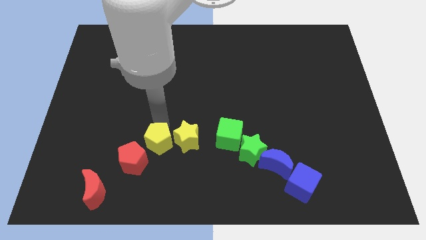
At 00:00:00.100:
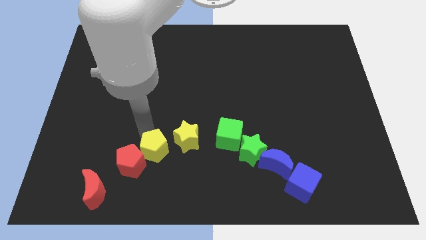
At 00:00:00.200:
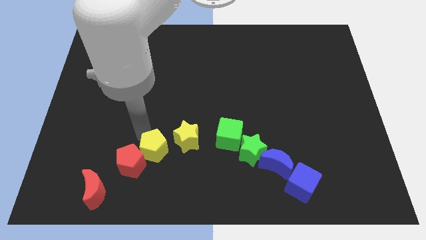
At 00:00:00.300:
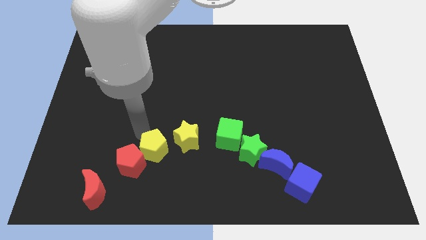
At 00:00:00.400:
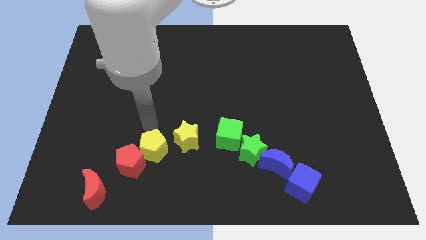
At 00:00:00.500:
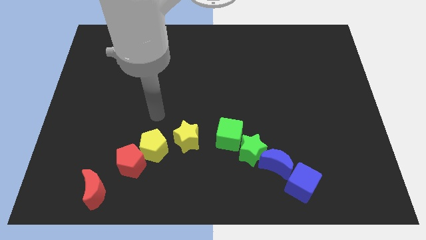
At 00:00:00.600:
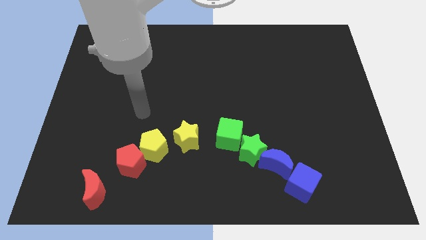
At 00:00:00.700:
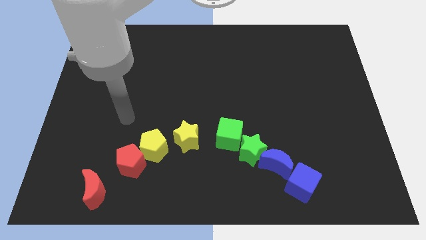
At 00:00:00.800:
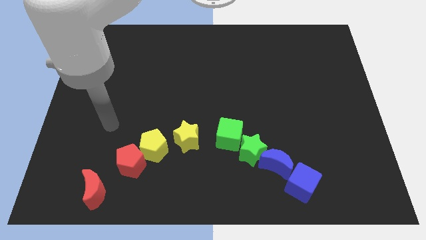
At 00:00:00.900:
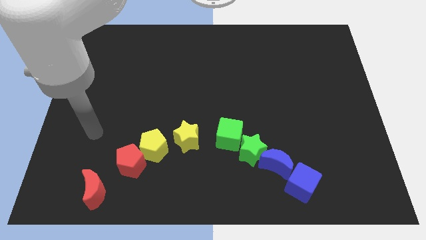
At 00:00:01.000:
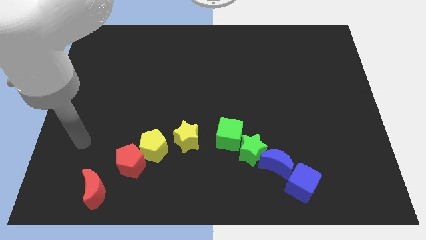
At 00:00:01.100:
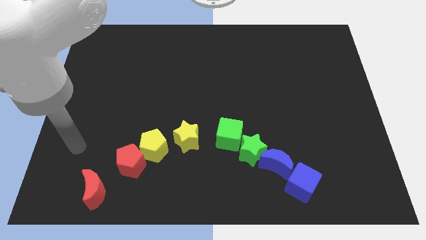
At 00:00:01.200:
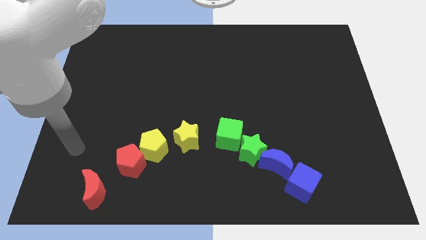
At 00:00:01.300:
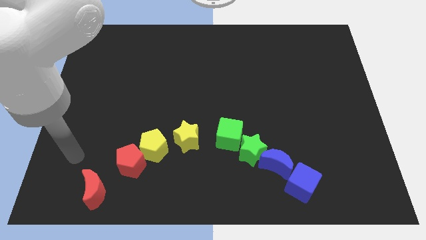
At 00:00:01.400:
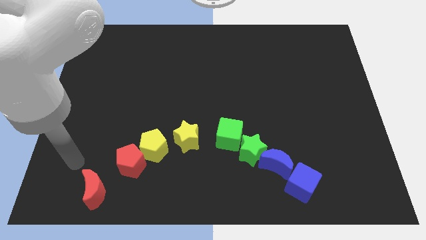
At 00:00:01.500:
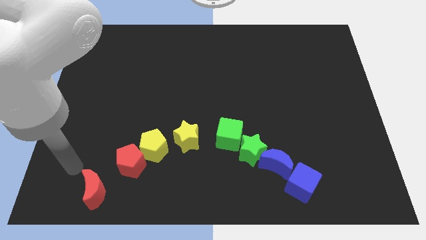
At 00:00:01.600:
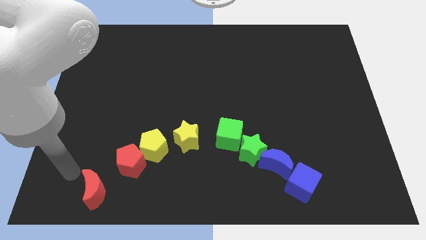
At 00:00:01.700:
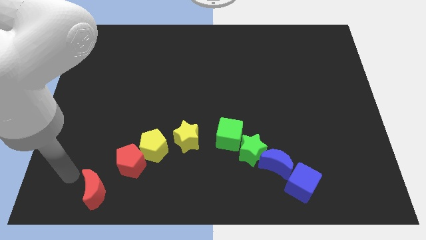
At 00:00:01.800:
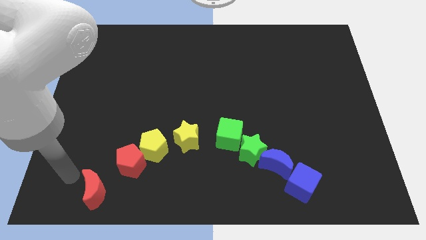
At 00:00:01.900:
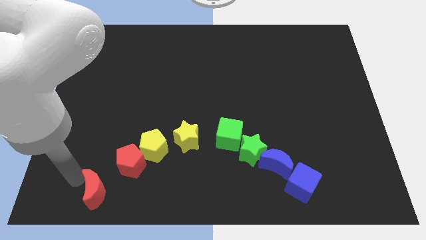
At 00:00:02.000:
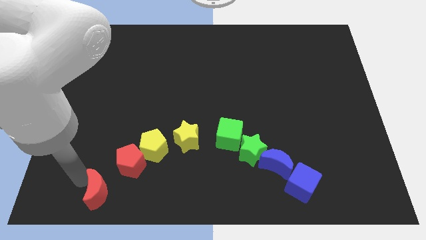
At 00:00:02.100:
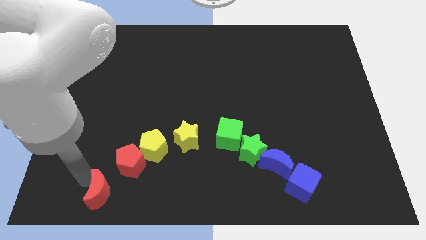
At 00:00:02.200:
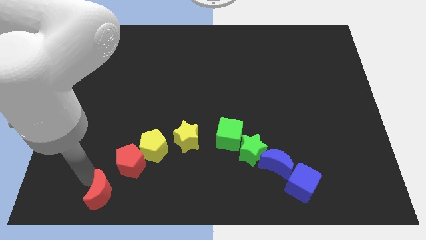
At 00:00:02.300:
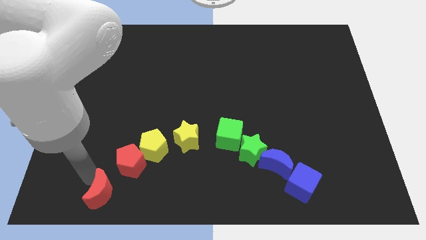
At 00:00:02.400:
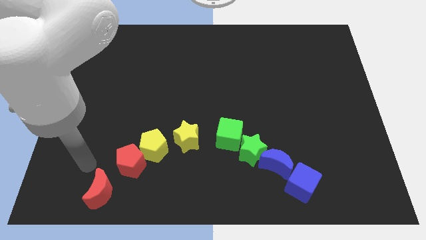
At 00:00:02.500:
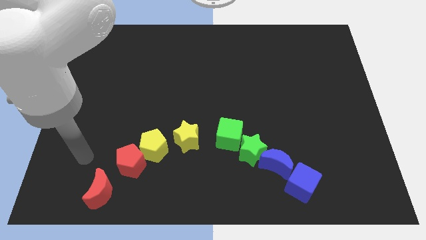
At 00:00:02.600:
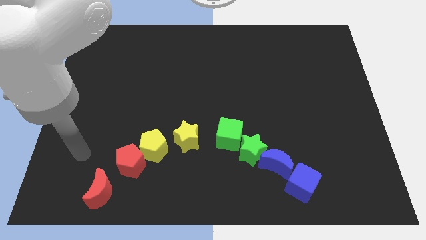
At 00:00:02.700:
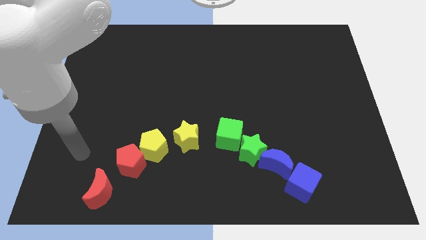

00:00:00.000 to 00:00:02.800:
slide the red moon slightly towards the right

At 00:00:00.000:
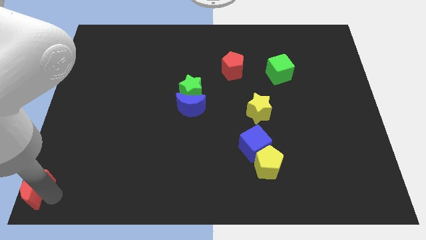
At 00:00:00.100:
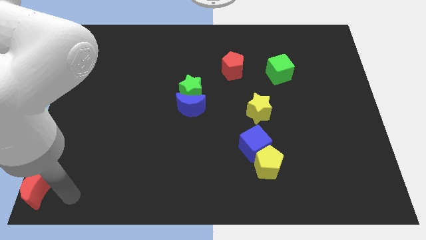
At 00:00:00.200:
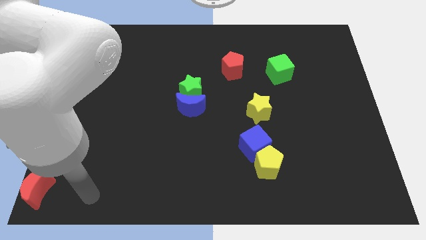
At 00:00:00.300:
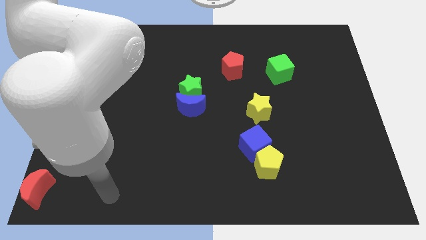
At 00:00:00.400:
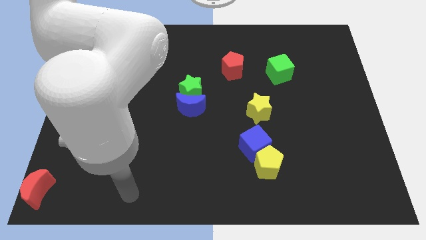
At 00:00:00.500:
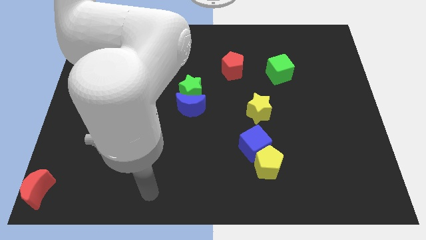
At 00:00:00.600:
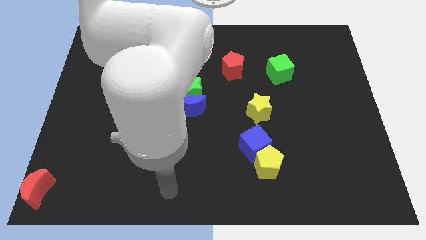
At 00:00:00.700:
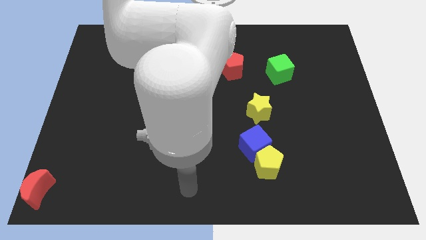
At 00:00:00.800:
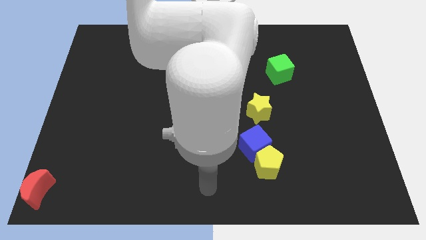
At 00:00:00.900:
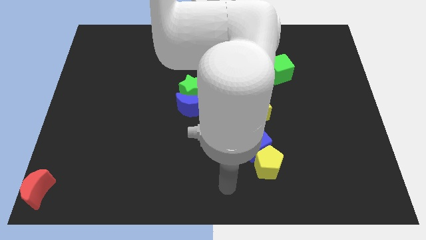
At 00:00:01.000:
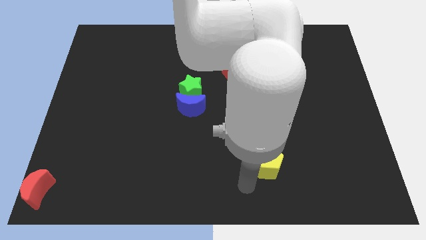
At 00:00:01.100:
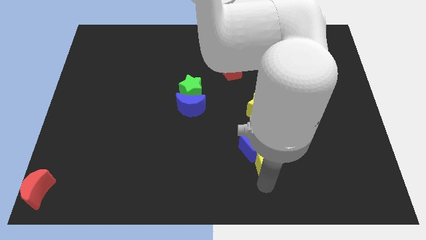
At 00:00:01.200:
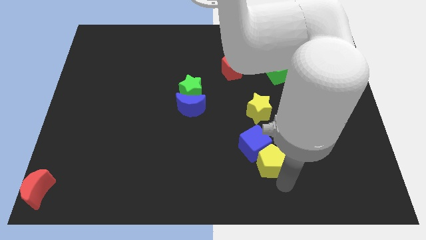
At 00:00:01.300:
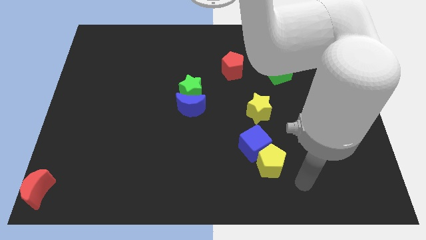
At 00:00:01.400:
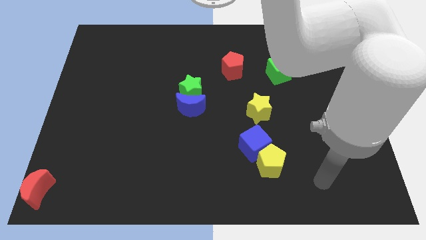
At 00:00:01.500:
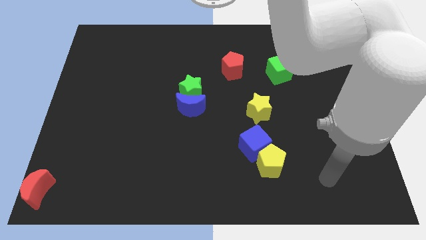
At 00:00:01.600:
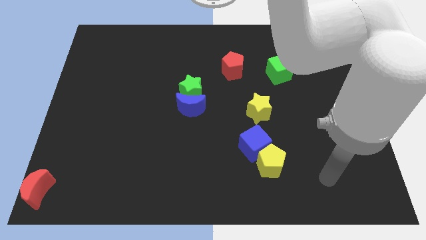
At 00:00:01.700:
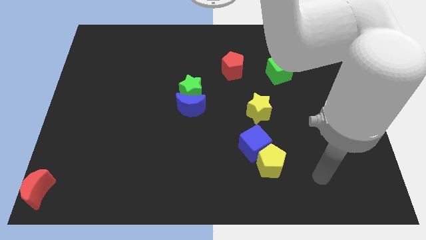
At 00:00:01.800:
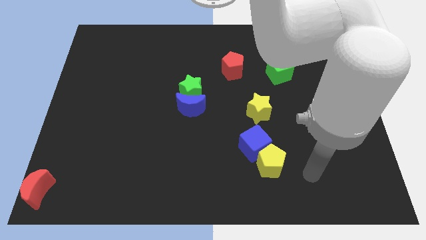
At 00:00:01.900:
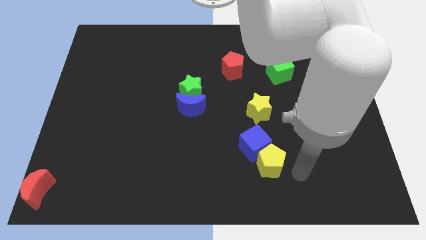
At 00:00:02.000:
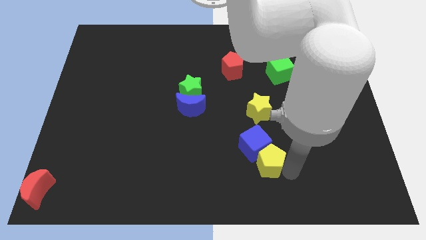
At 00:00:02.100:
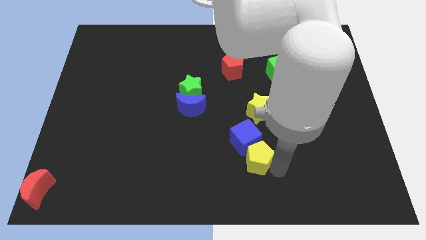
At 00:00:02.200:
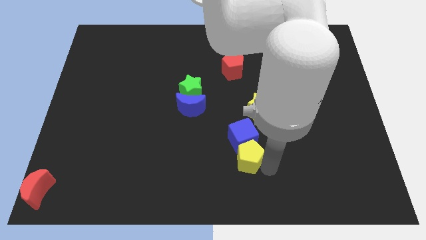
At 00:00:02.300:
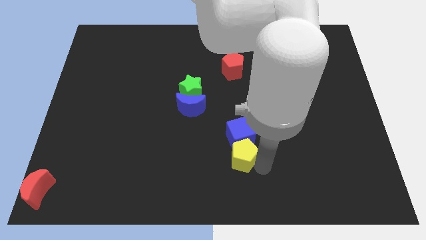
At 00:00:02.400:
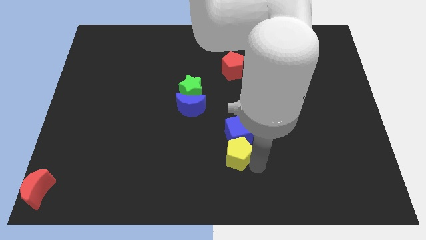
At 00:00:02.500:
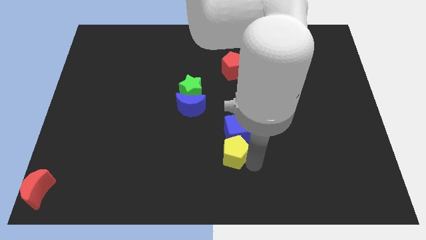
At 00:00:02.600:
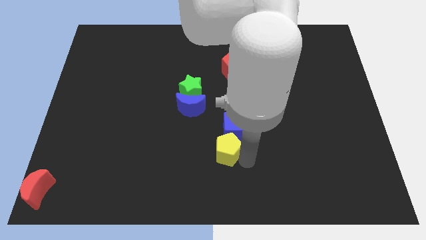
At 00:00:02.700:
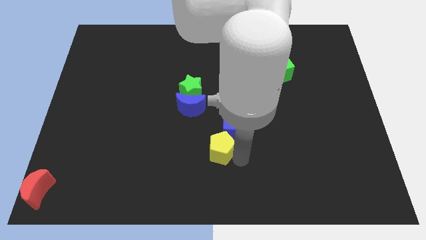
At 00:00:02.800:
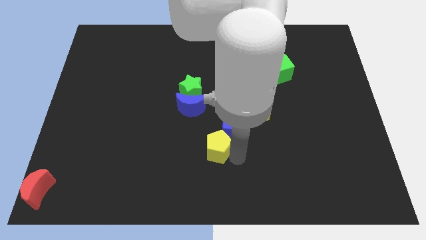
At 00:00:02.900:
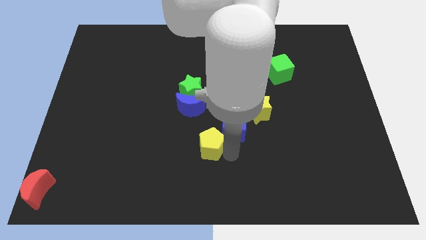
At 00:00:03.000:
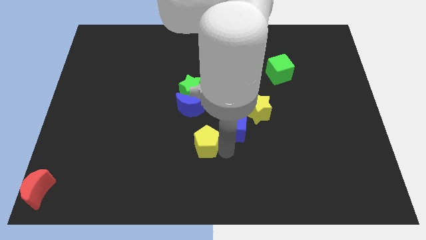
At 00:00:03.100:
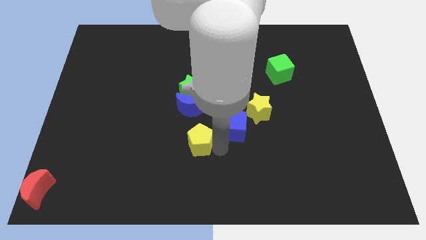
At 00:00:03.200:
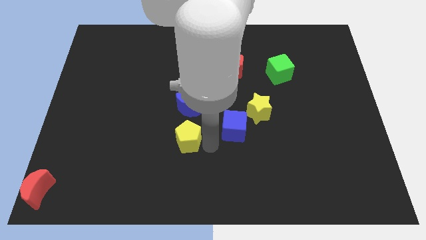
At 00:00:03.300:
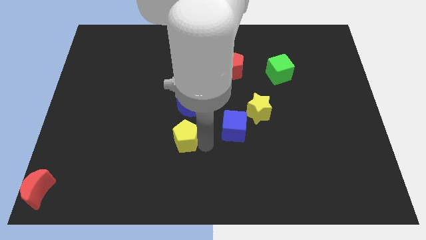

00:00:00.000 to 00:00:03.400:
place the yellow pentagon down to the blue moon

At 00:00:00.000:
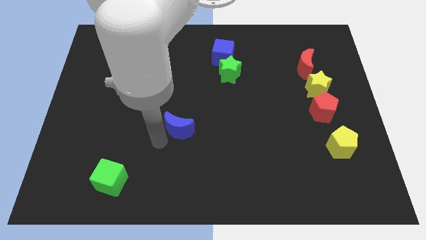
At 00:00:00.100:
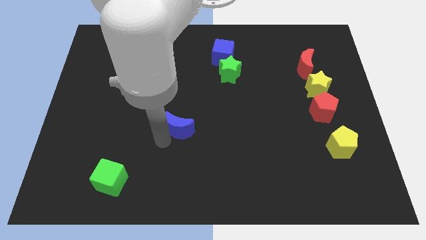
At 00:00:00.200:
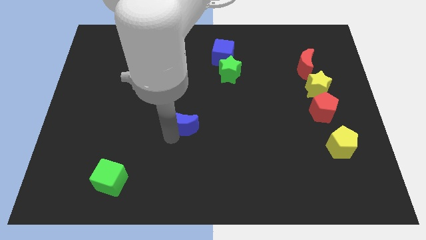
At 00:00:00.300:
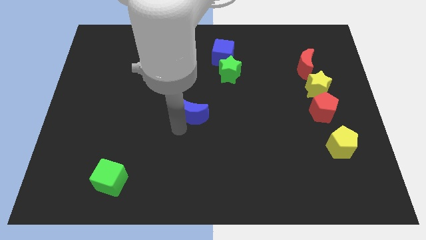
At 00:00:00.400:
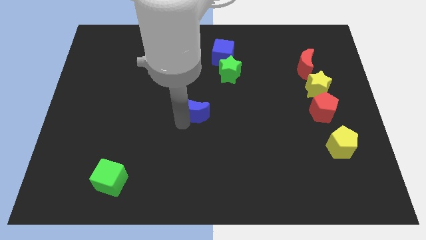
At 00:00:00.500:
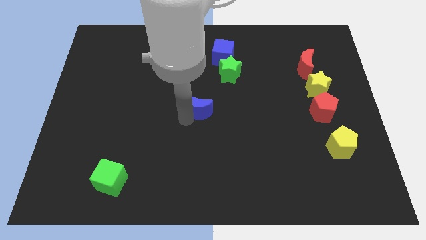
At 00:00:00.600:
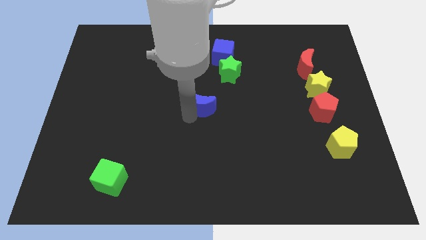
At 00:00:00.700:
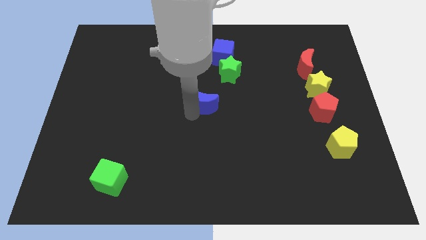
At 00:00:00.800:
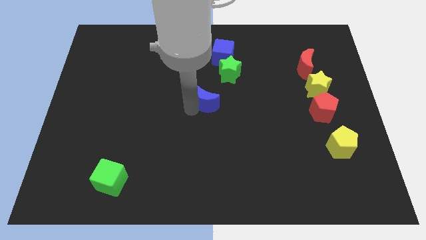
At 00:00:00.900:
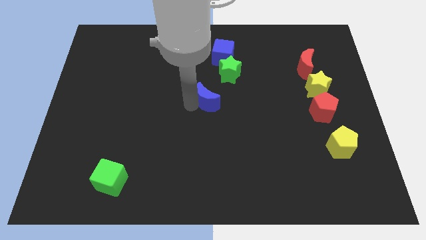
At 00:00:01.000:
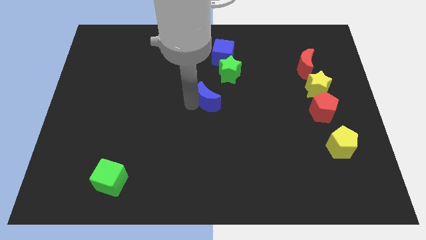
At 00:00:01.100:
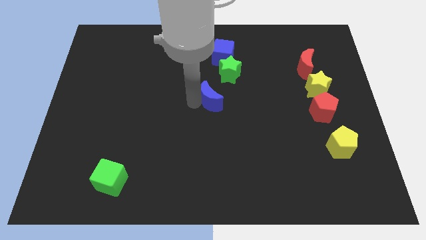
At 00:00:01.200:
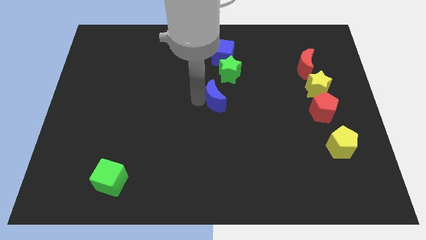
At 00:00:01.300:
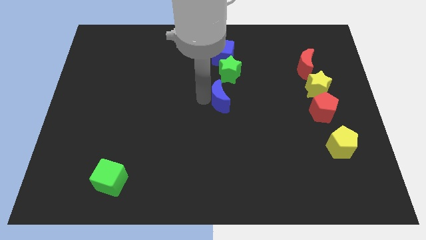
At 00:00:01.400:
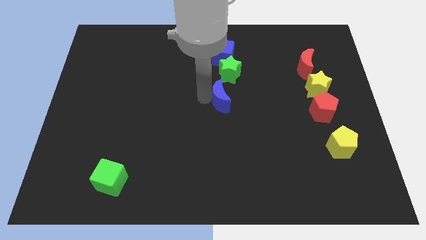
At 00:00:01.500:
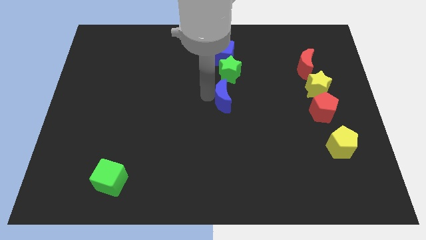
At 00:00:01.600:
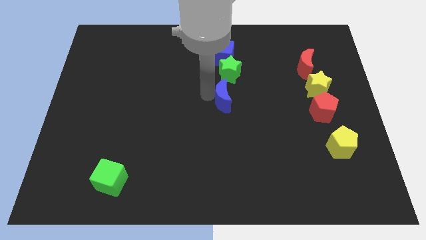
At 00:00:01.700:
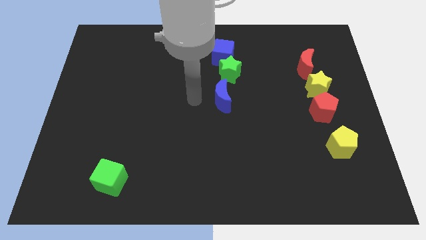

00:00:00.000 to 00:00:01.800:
push the blue moon to the bottom side of the green star

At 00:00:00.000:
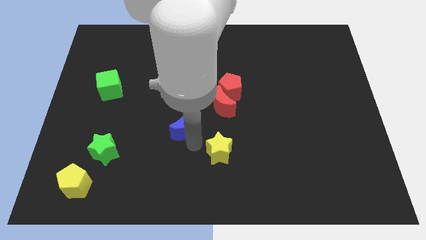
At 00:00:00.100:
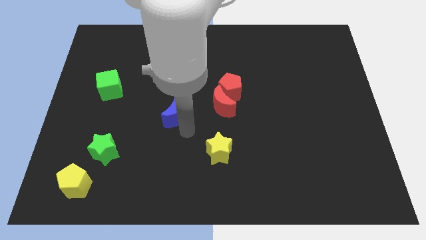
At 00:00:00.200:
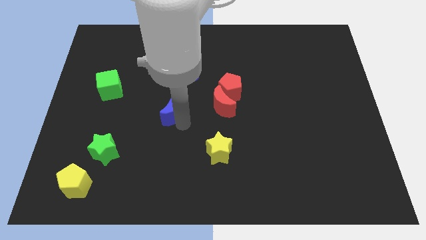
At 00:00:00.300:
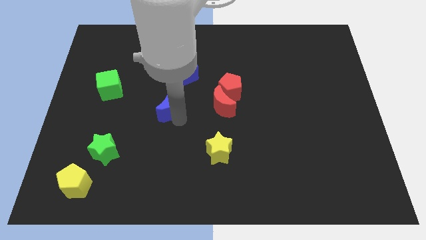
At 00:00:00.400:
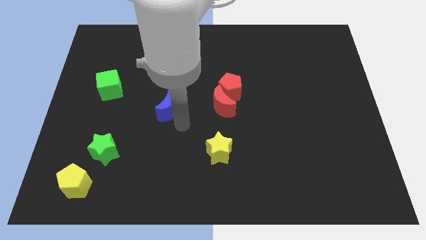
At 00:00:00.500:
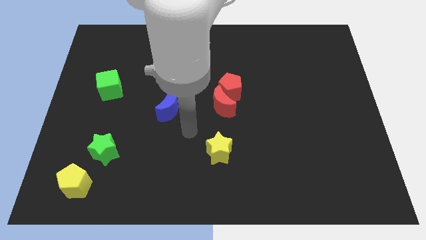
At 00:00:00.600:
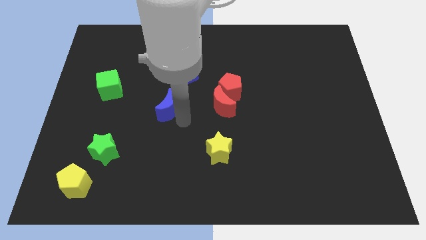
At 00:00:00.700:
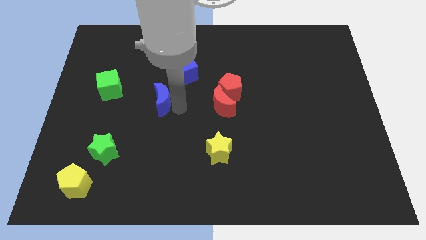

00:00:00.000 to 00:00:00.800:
move the blue crescent parallel to the red crescent
